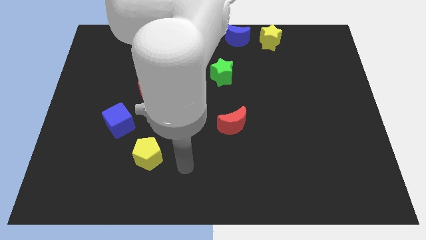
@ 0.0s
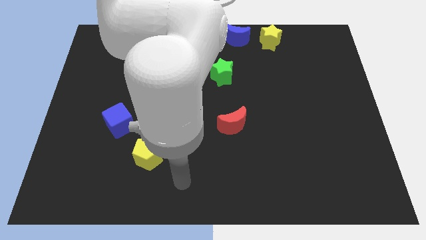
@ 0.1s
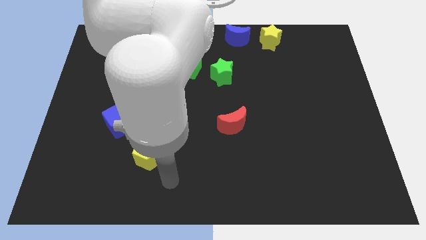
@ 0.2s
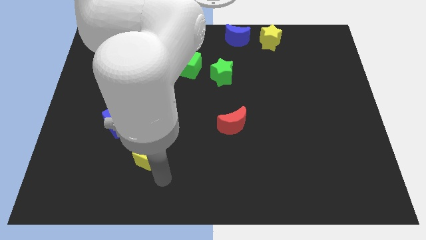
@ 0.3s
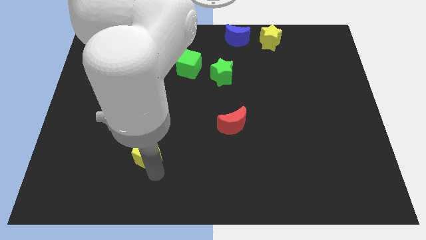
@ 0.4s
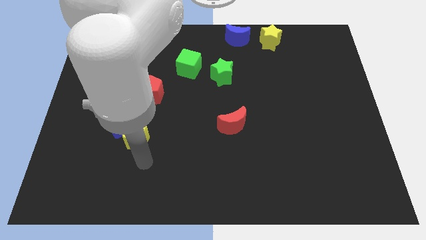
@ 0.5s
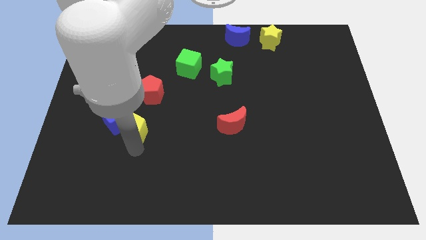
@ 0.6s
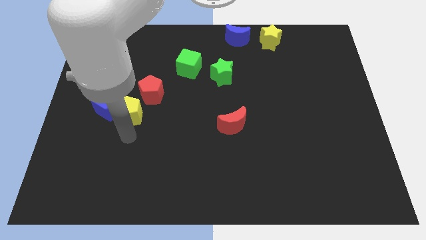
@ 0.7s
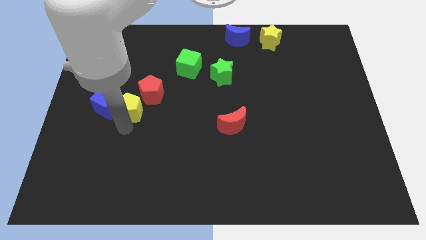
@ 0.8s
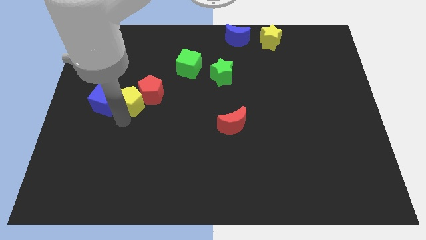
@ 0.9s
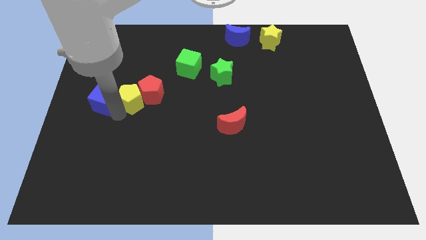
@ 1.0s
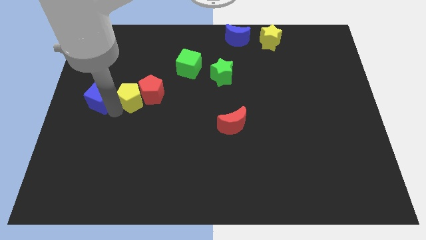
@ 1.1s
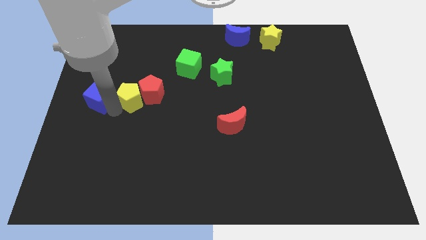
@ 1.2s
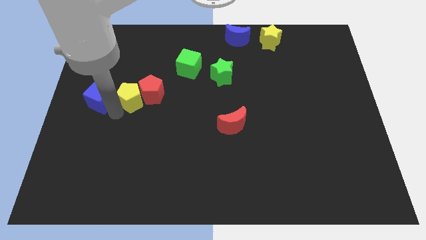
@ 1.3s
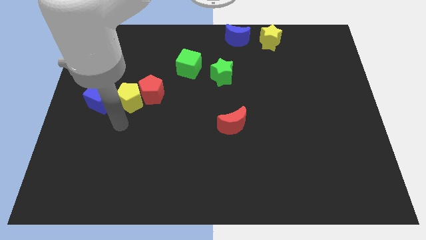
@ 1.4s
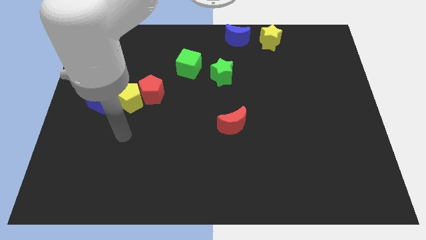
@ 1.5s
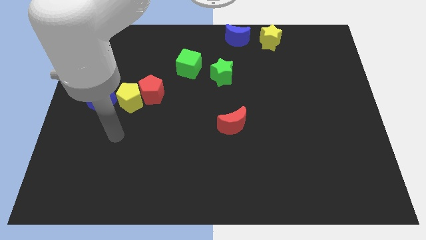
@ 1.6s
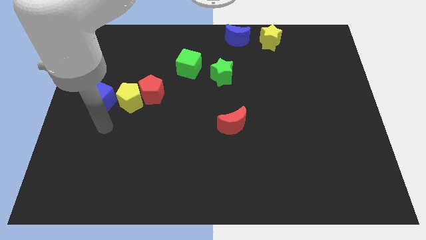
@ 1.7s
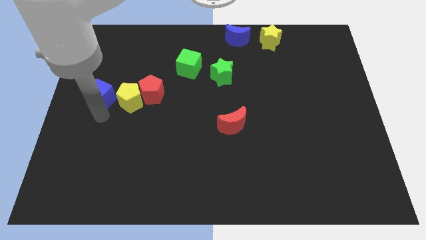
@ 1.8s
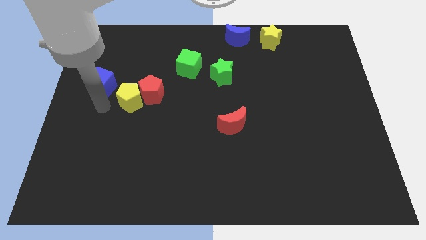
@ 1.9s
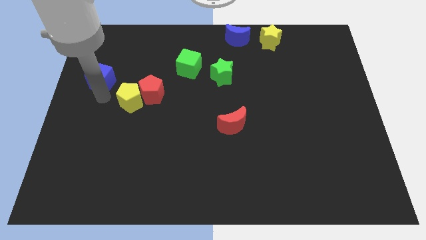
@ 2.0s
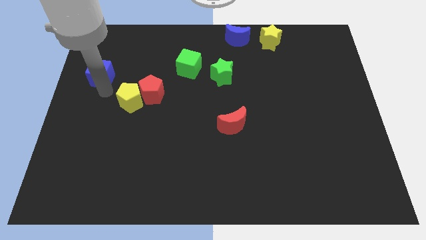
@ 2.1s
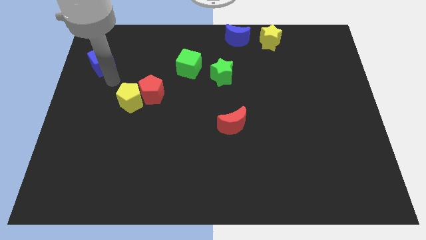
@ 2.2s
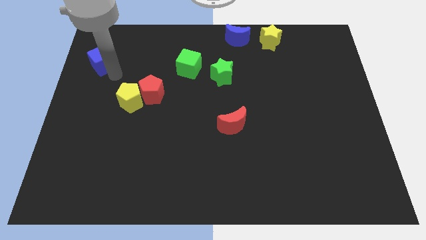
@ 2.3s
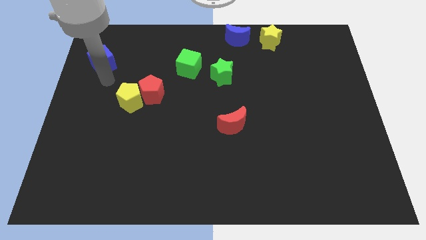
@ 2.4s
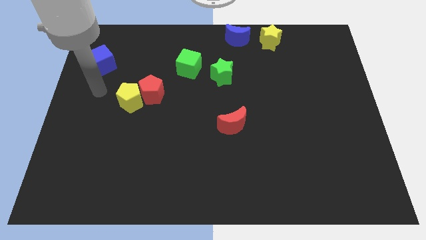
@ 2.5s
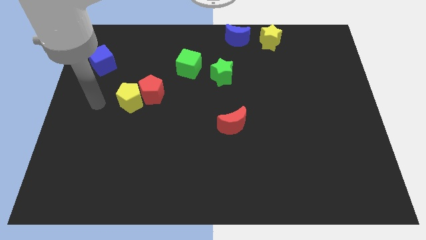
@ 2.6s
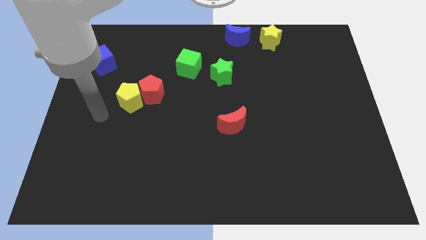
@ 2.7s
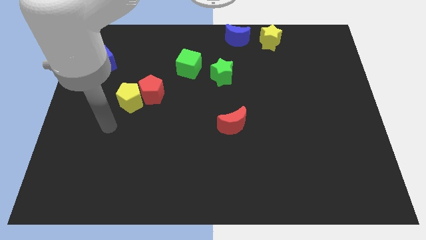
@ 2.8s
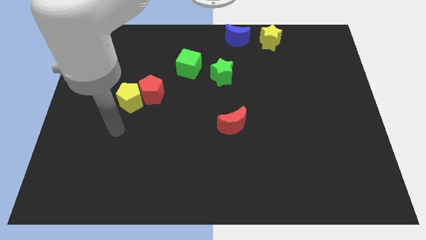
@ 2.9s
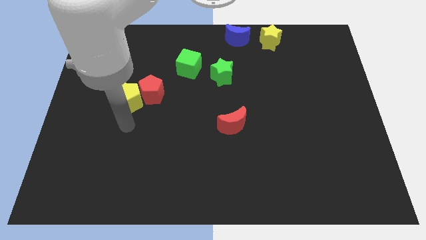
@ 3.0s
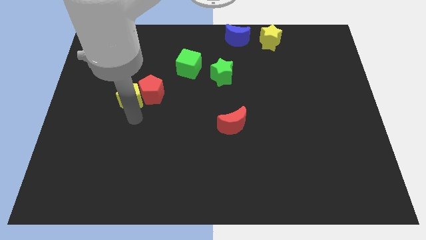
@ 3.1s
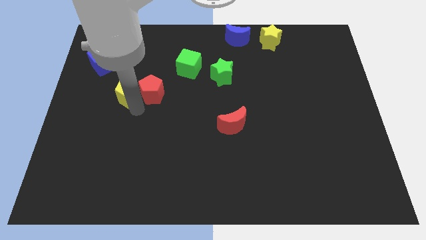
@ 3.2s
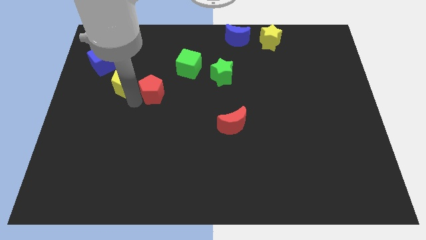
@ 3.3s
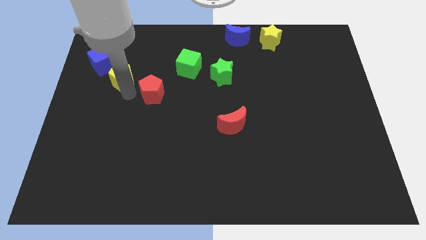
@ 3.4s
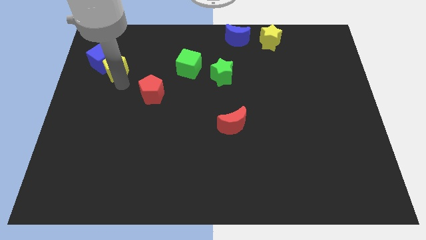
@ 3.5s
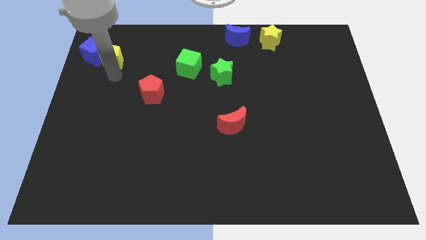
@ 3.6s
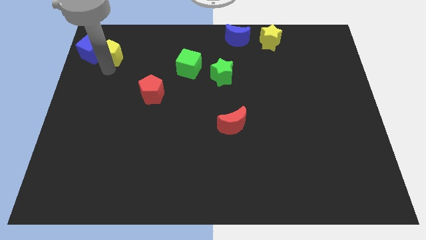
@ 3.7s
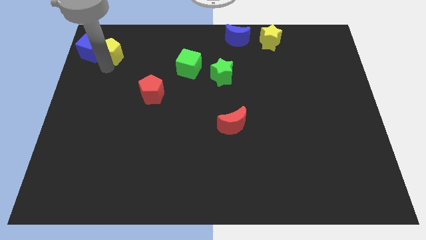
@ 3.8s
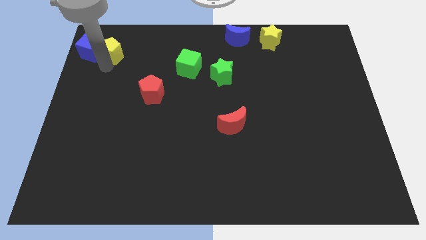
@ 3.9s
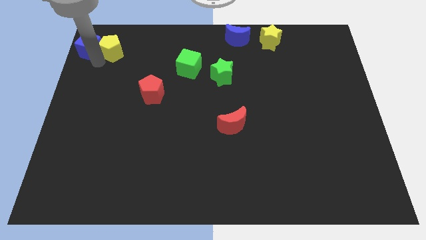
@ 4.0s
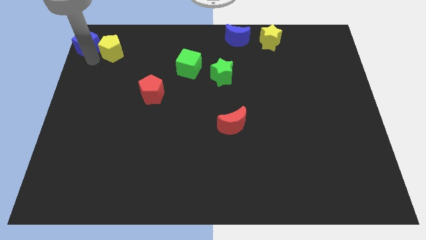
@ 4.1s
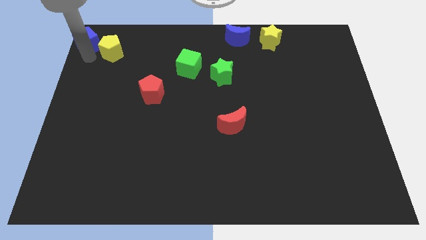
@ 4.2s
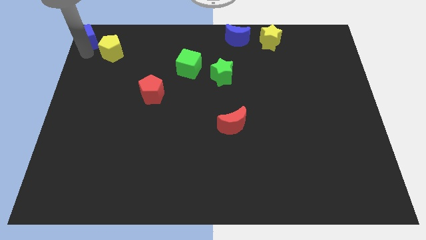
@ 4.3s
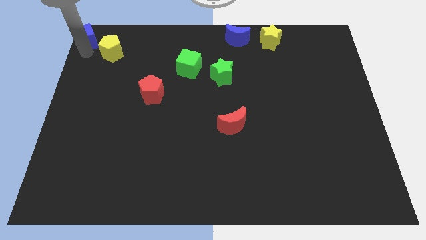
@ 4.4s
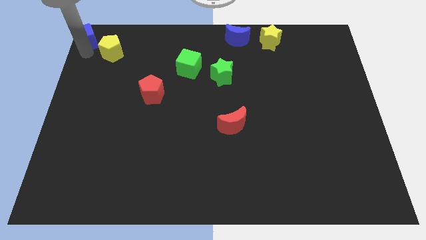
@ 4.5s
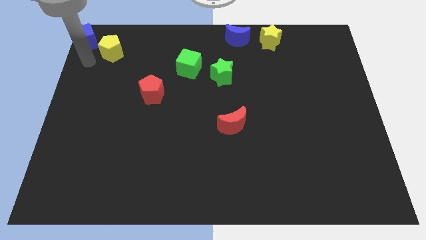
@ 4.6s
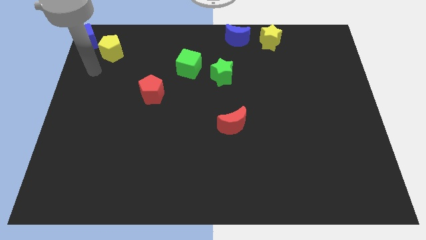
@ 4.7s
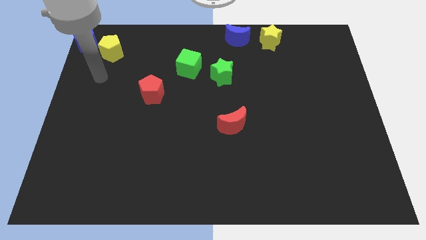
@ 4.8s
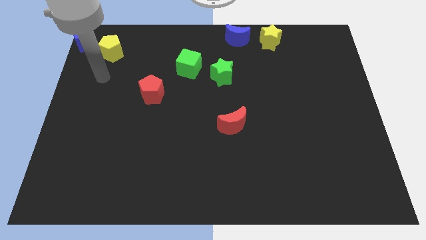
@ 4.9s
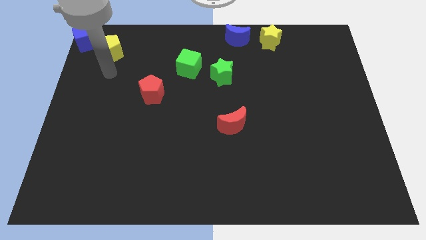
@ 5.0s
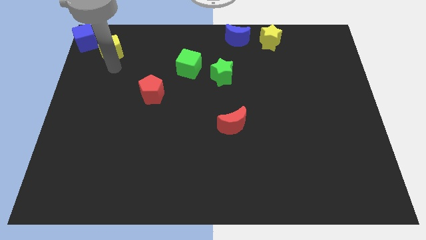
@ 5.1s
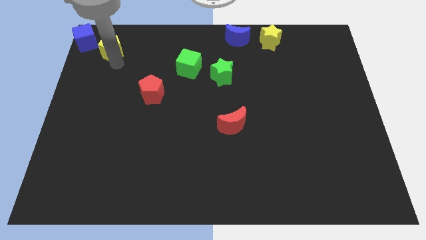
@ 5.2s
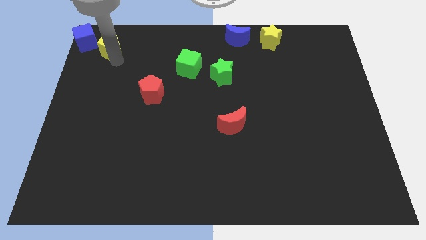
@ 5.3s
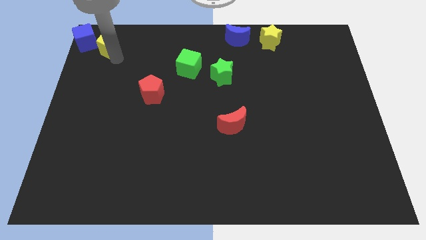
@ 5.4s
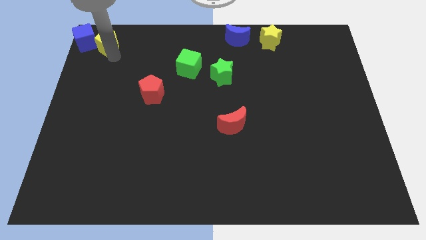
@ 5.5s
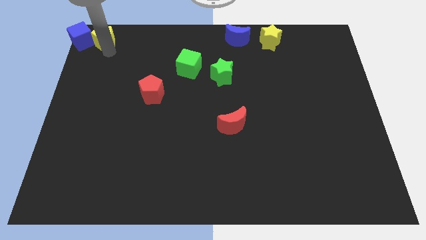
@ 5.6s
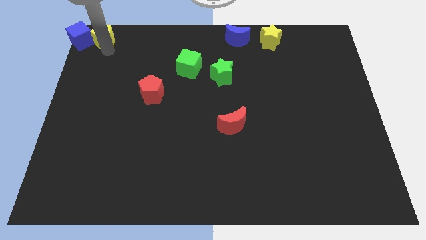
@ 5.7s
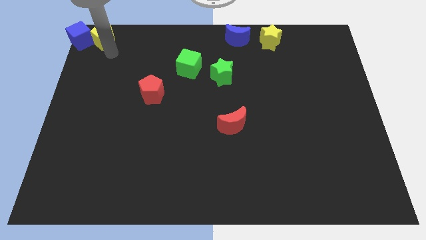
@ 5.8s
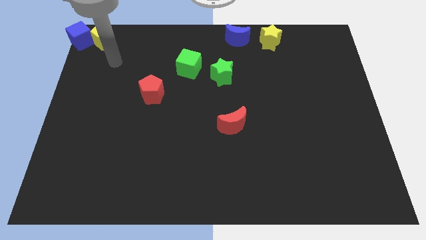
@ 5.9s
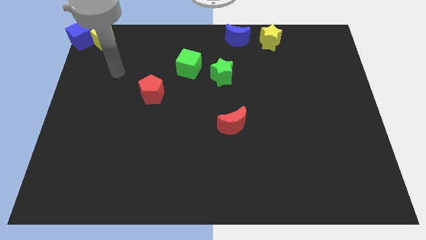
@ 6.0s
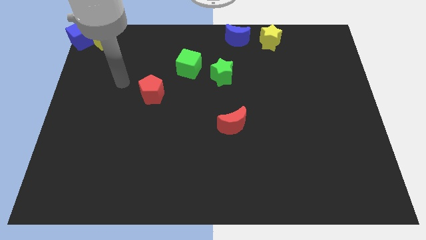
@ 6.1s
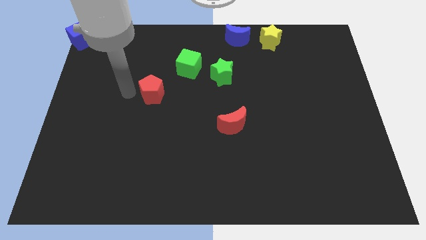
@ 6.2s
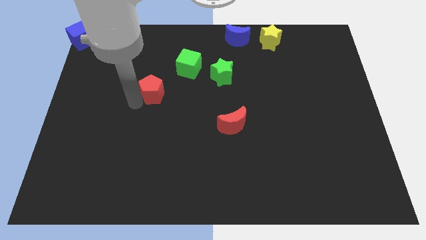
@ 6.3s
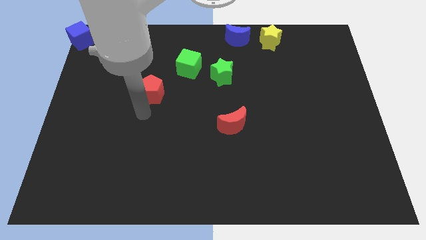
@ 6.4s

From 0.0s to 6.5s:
push the blue cube and yellow pentagon to the top left corner of the board

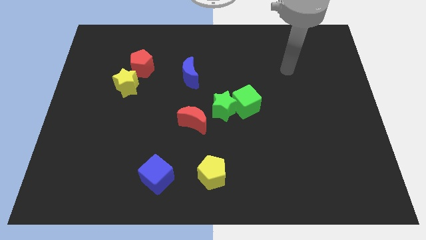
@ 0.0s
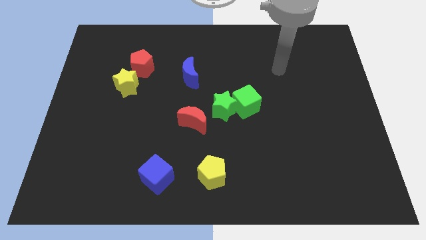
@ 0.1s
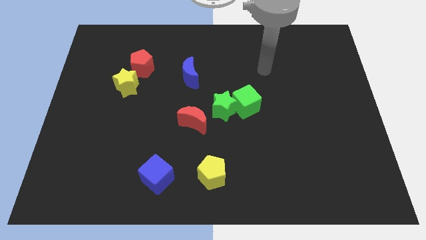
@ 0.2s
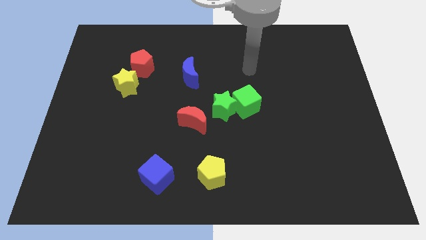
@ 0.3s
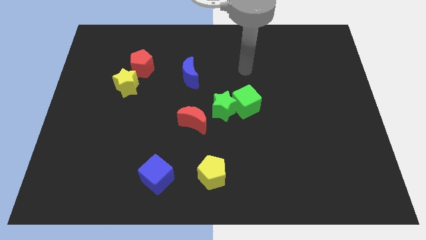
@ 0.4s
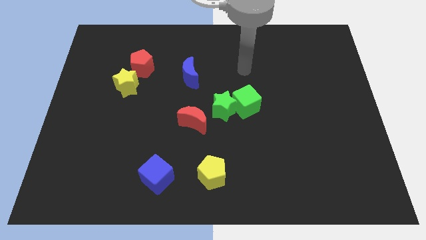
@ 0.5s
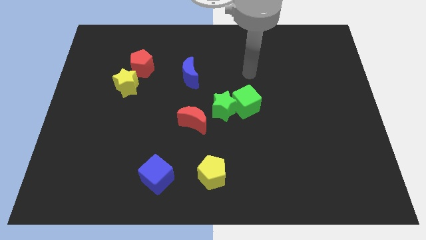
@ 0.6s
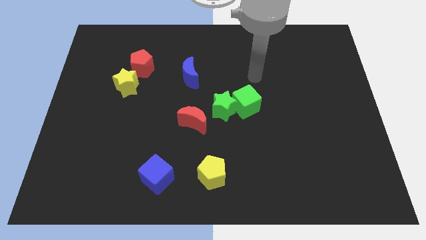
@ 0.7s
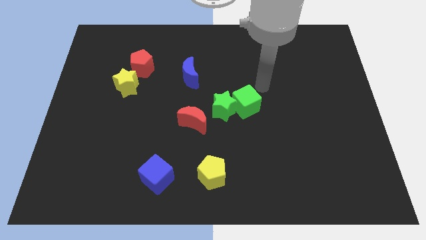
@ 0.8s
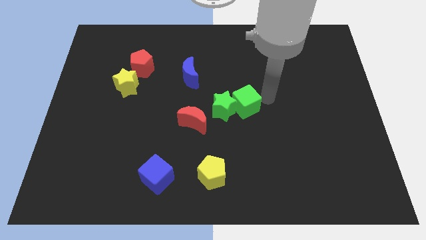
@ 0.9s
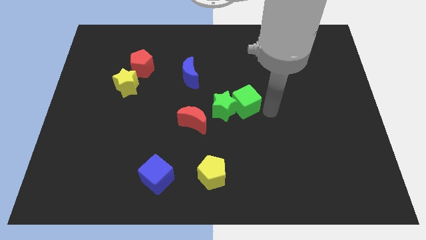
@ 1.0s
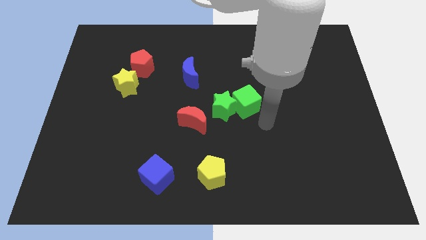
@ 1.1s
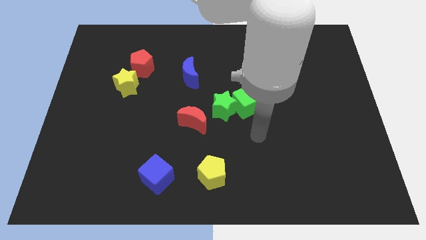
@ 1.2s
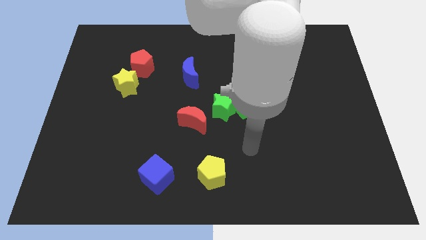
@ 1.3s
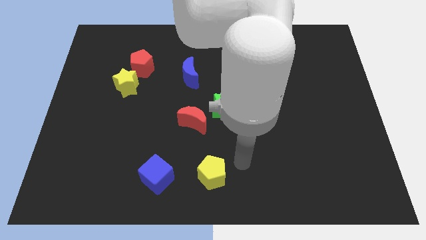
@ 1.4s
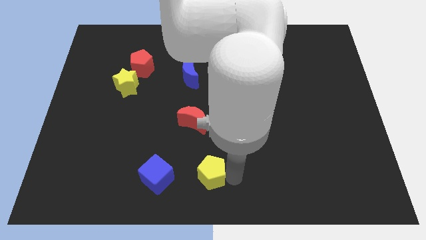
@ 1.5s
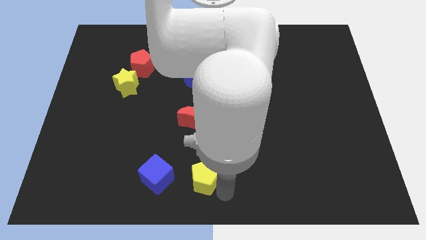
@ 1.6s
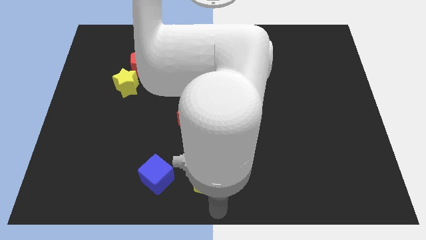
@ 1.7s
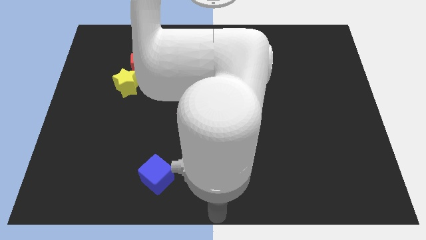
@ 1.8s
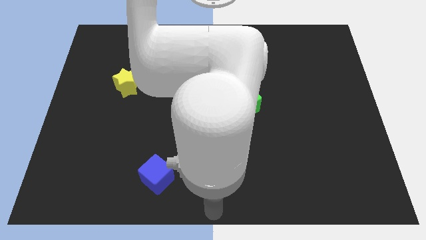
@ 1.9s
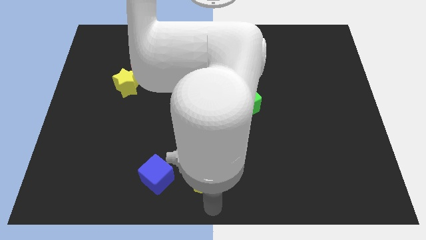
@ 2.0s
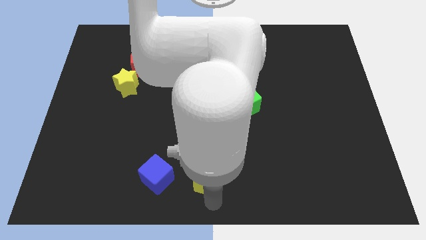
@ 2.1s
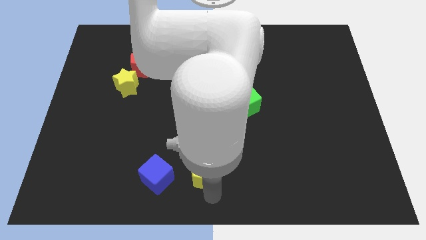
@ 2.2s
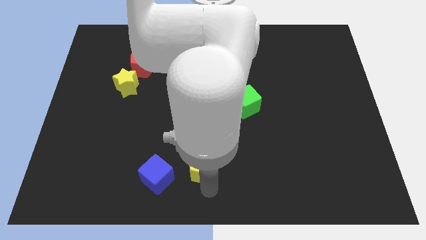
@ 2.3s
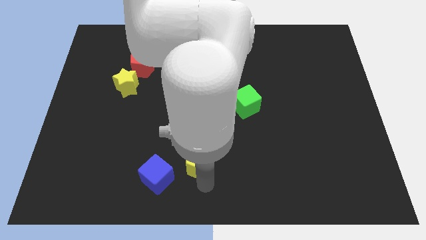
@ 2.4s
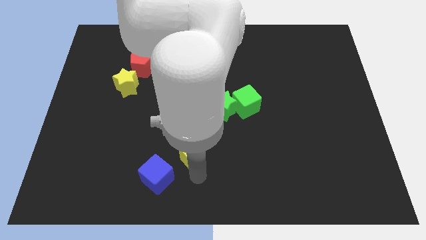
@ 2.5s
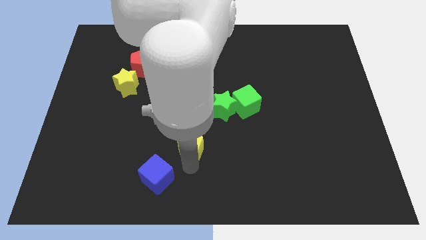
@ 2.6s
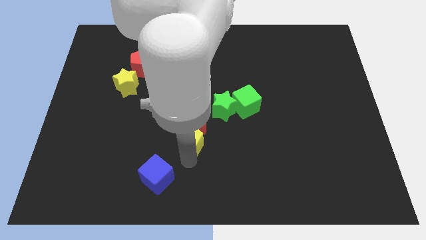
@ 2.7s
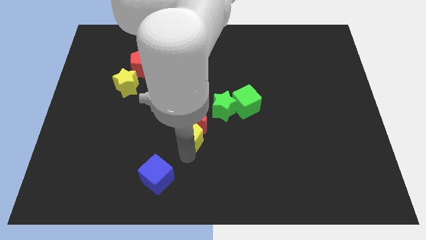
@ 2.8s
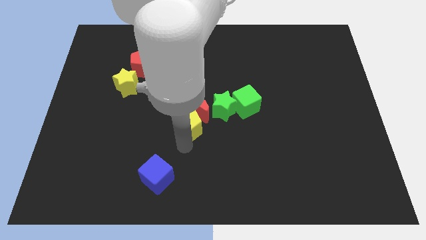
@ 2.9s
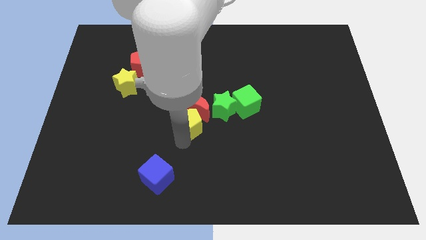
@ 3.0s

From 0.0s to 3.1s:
push the yellow pentagon into the red crescent
